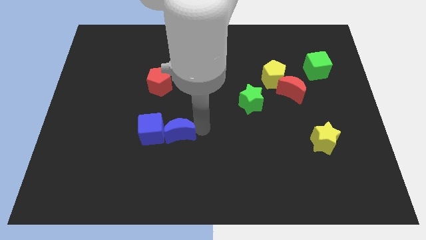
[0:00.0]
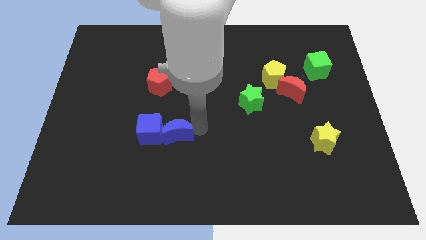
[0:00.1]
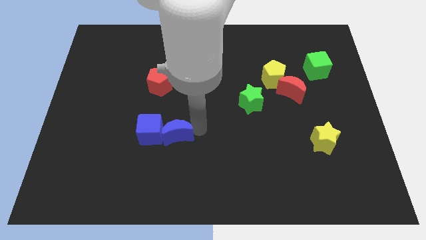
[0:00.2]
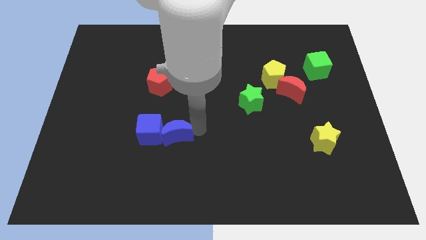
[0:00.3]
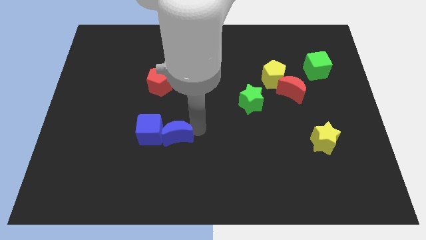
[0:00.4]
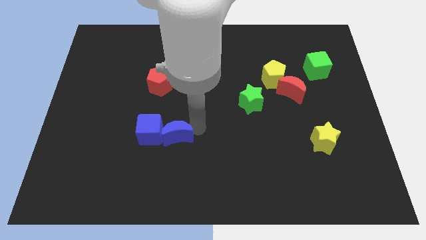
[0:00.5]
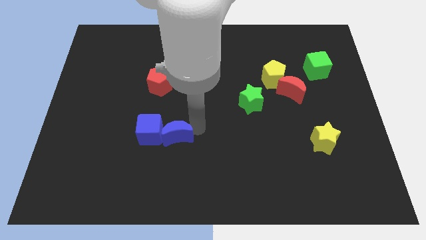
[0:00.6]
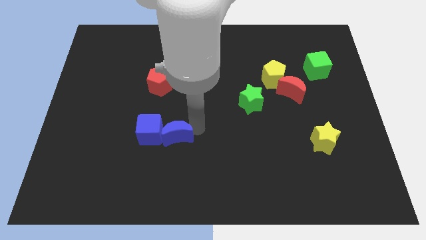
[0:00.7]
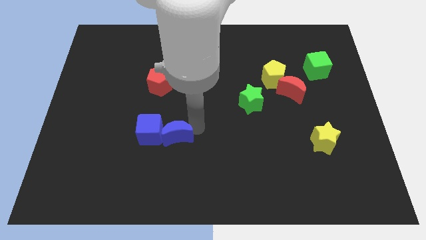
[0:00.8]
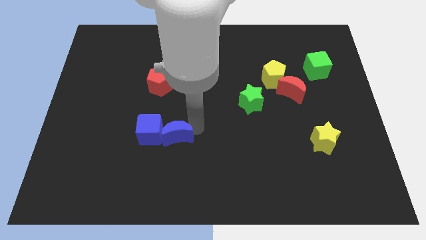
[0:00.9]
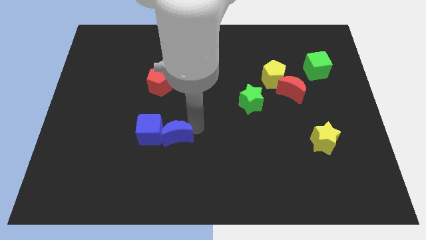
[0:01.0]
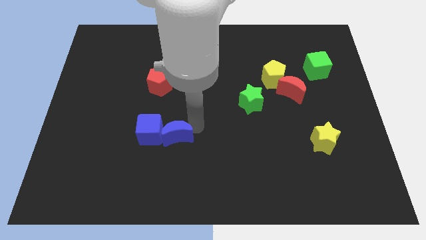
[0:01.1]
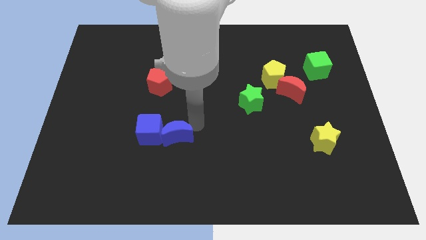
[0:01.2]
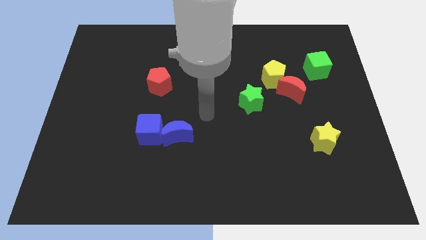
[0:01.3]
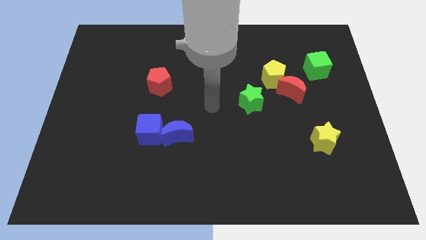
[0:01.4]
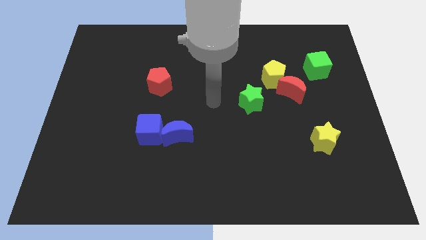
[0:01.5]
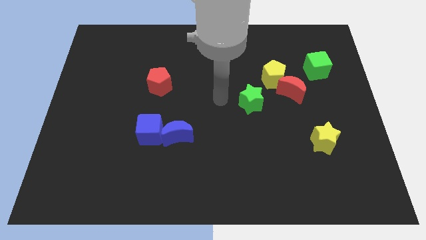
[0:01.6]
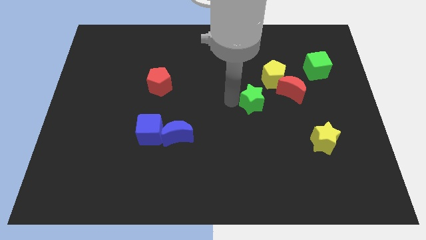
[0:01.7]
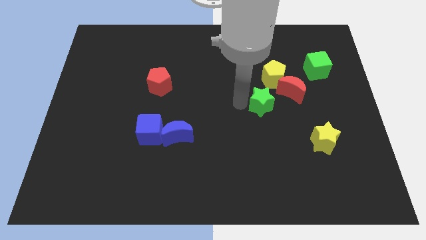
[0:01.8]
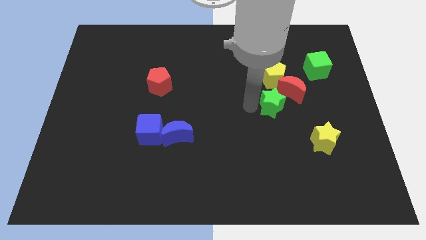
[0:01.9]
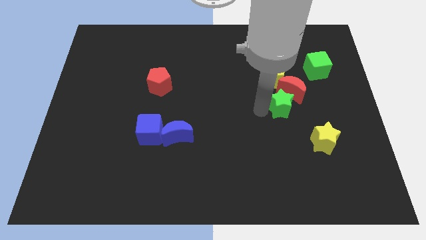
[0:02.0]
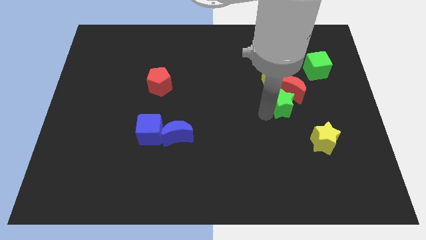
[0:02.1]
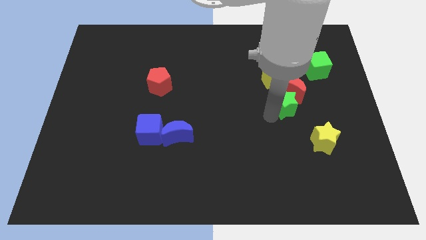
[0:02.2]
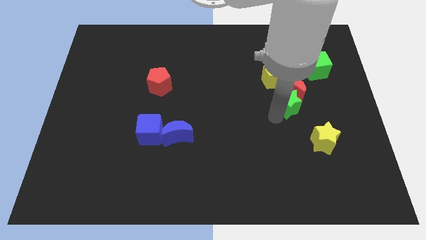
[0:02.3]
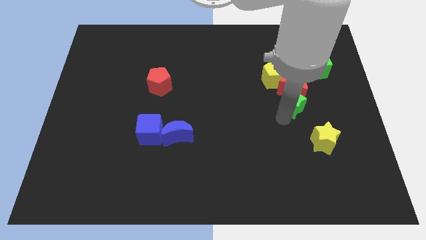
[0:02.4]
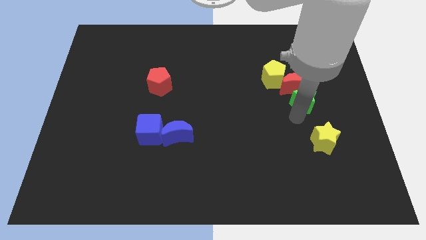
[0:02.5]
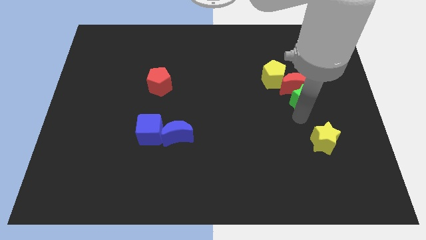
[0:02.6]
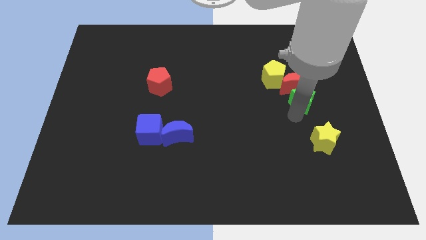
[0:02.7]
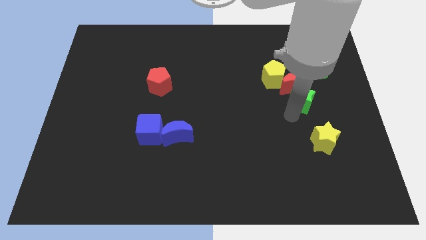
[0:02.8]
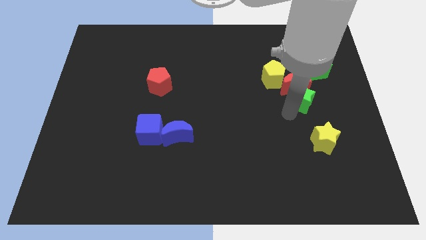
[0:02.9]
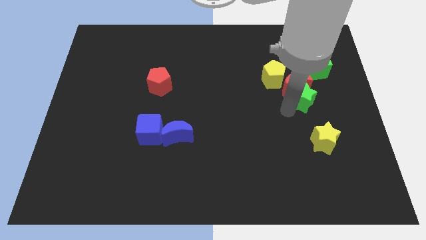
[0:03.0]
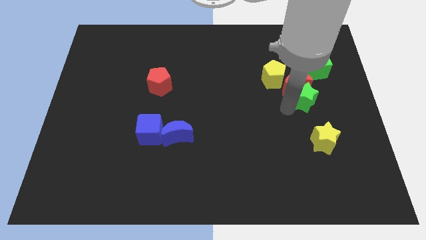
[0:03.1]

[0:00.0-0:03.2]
move the green star into the red moon

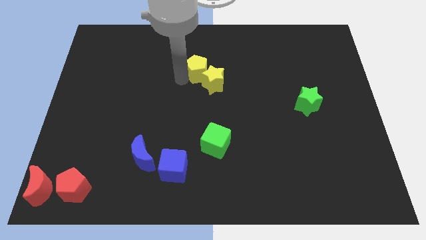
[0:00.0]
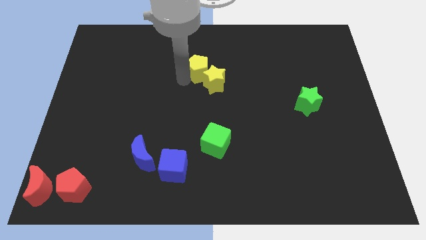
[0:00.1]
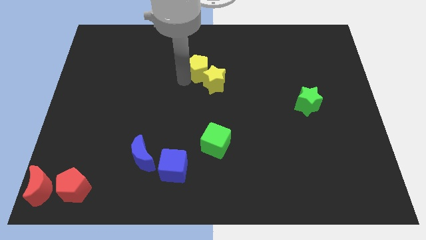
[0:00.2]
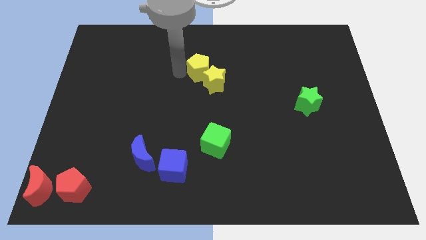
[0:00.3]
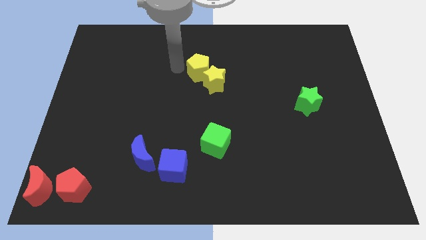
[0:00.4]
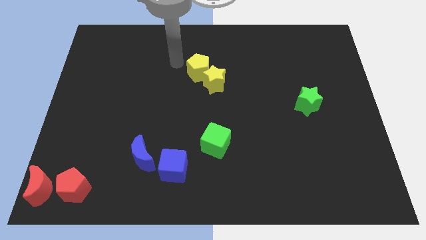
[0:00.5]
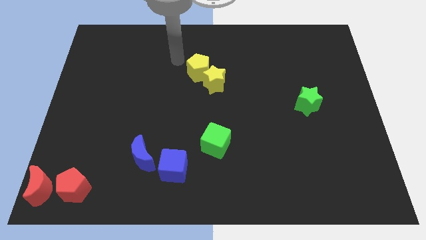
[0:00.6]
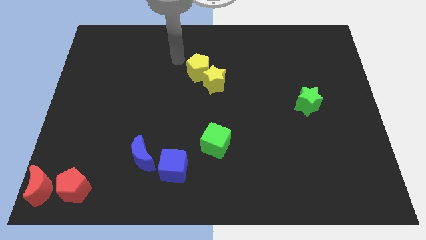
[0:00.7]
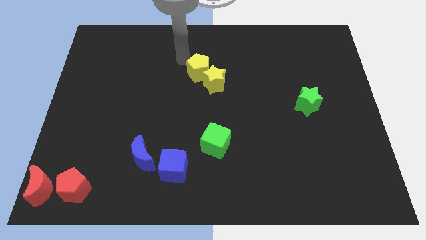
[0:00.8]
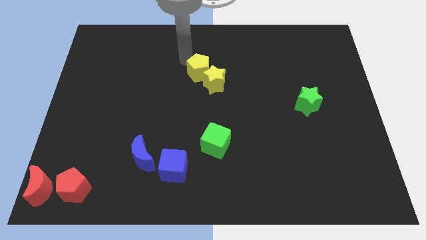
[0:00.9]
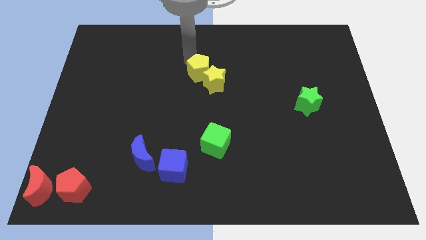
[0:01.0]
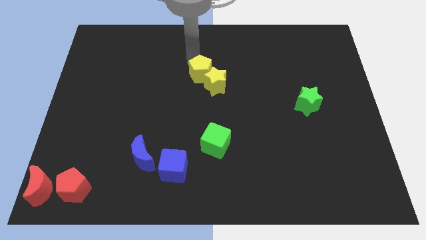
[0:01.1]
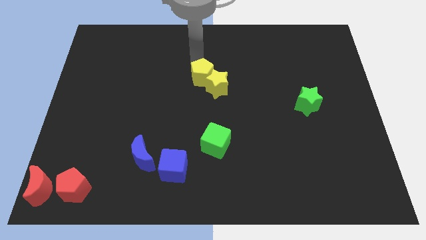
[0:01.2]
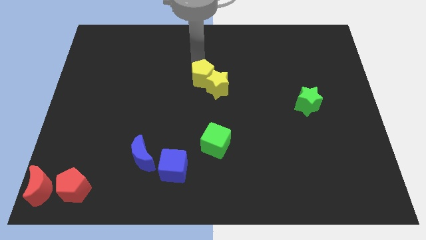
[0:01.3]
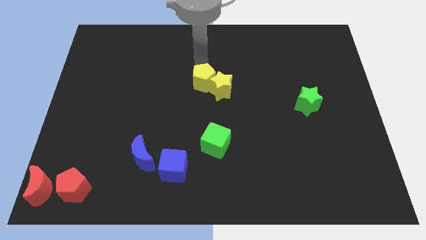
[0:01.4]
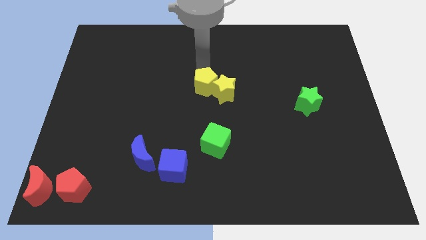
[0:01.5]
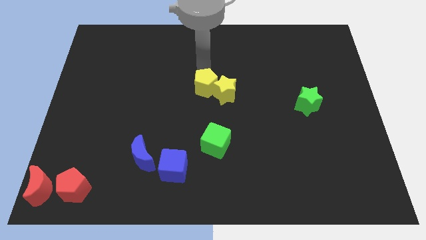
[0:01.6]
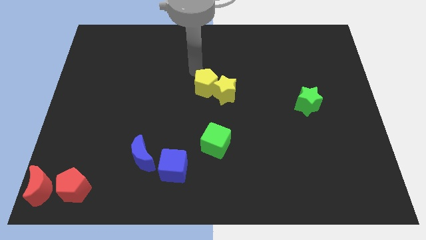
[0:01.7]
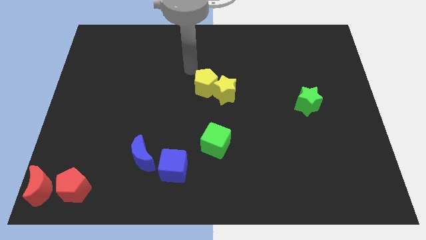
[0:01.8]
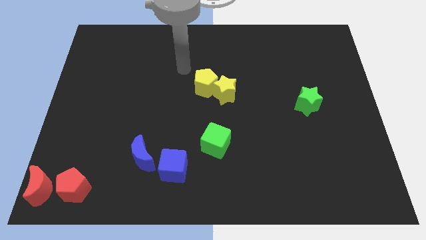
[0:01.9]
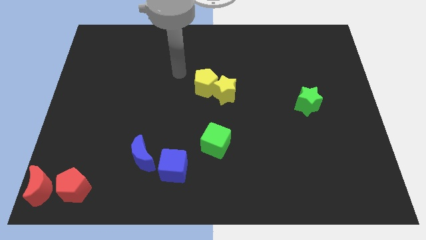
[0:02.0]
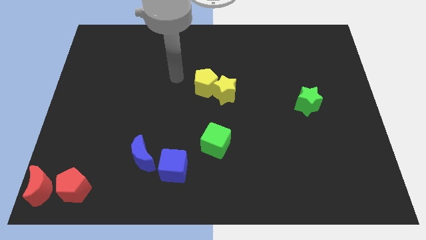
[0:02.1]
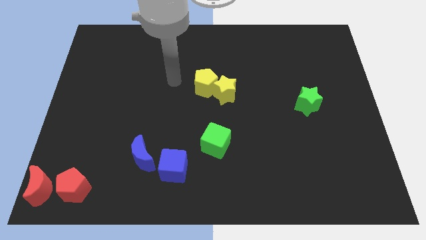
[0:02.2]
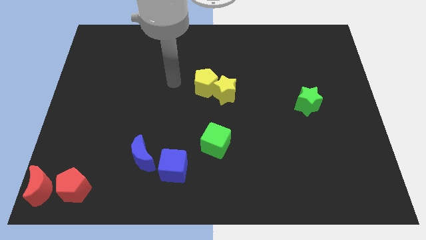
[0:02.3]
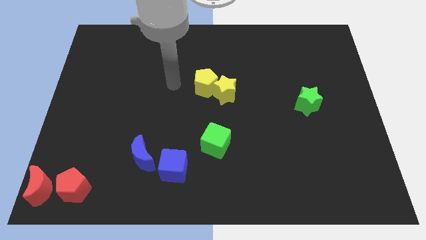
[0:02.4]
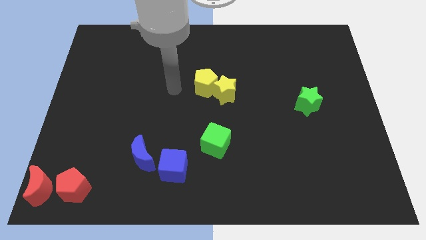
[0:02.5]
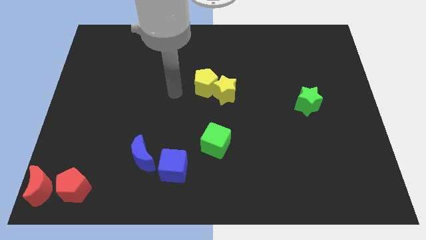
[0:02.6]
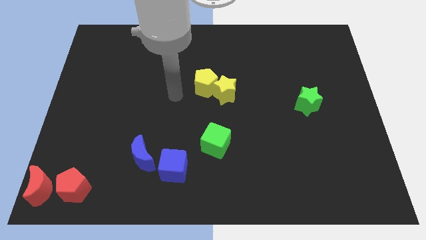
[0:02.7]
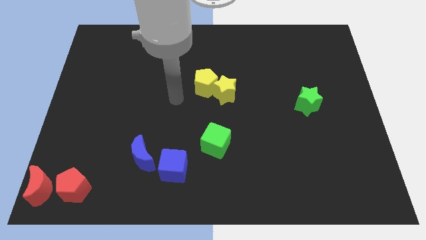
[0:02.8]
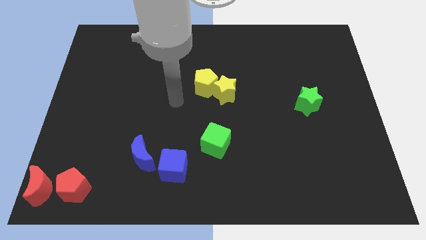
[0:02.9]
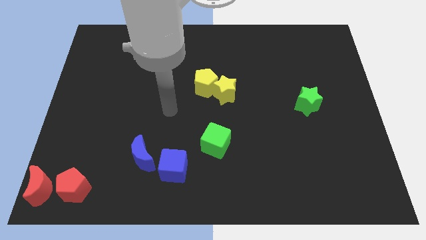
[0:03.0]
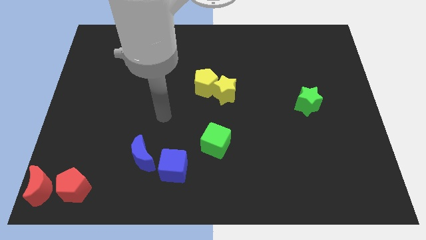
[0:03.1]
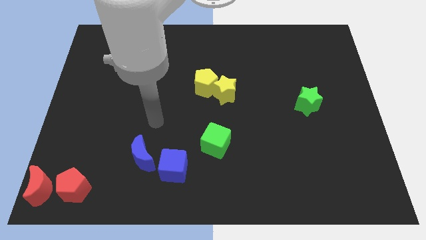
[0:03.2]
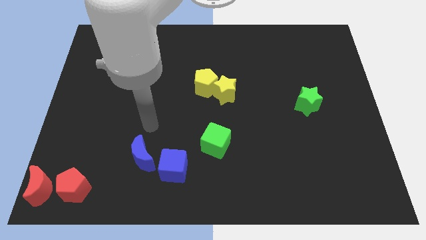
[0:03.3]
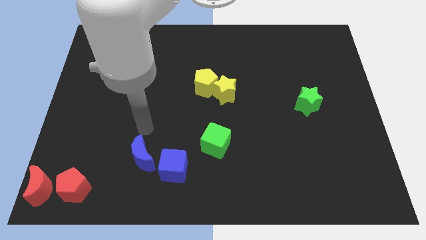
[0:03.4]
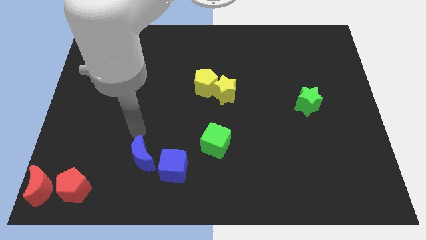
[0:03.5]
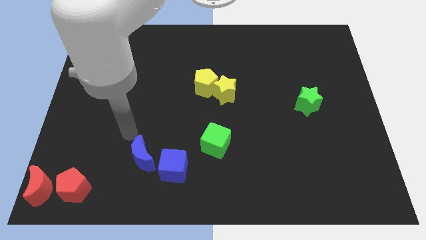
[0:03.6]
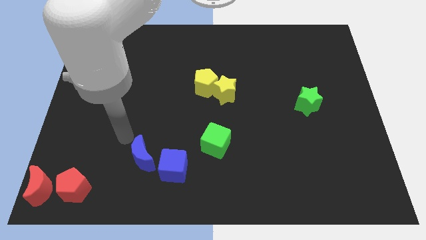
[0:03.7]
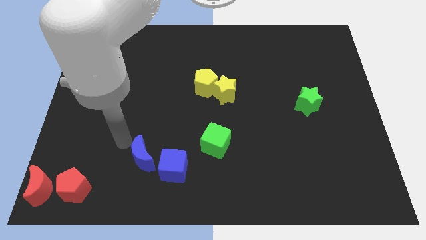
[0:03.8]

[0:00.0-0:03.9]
push the yellow star towards the center with the yellow pentagon

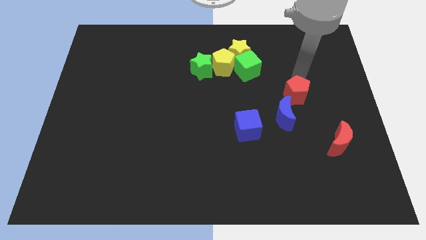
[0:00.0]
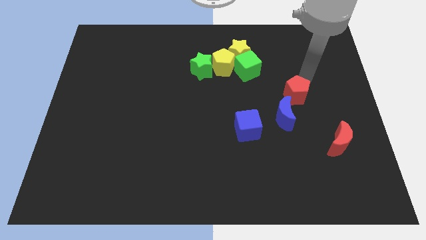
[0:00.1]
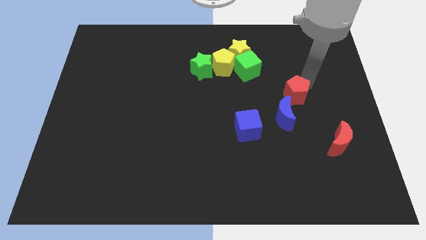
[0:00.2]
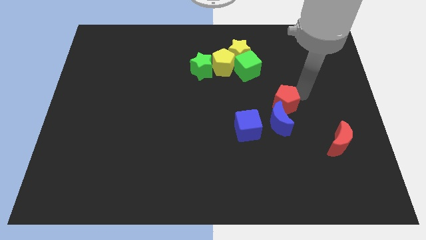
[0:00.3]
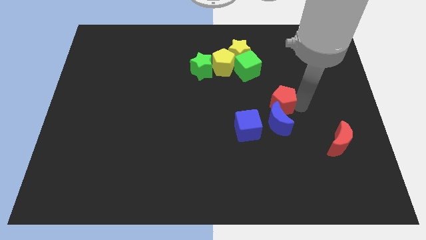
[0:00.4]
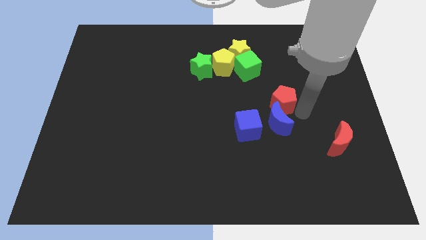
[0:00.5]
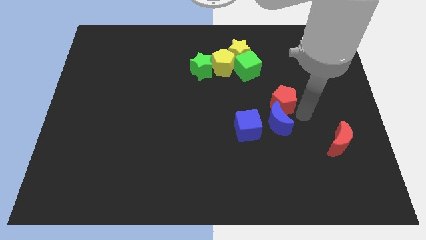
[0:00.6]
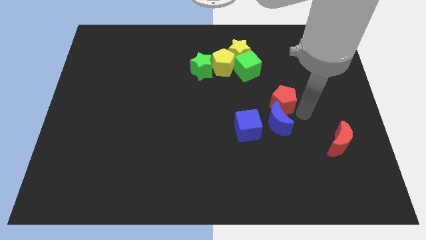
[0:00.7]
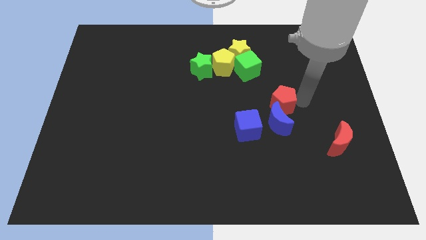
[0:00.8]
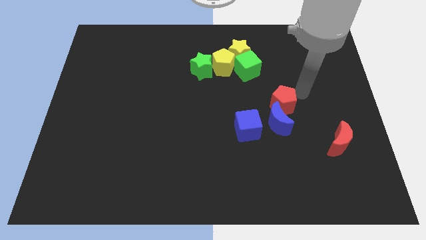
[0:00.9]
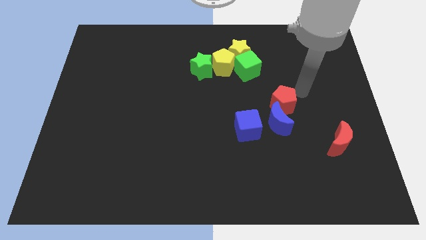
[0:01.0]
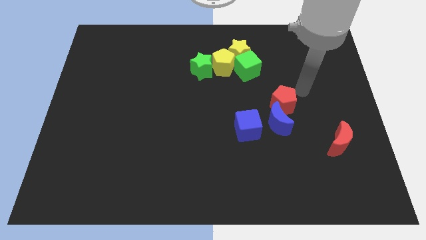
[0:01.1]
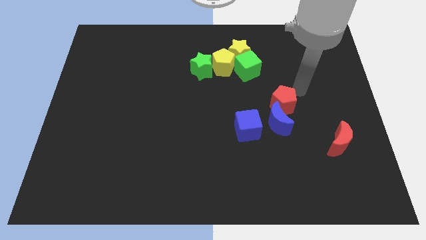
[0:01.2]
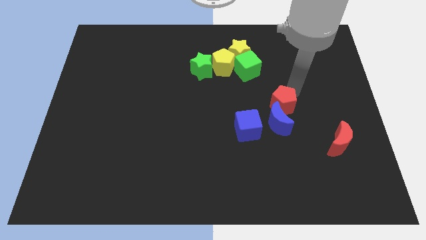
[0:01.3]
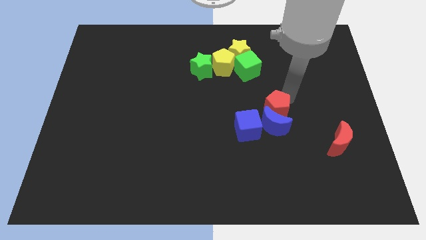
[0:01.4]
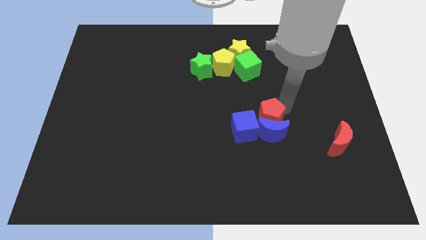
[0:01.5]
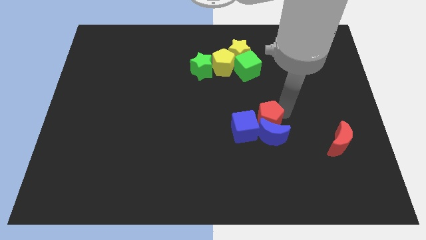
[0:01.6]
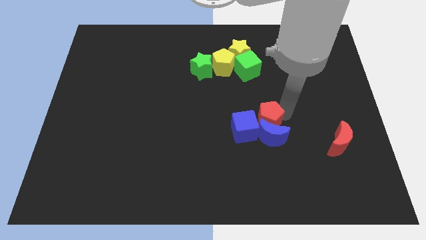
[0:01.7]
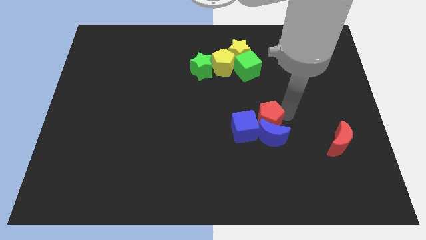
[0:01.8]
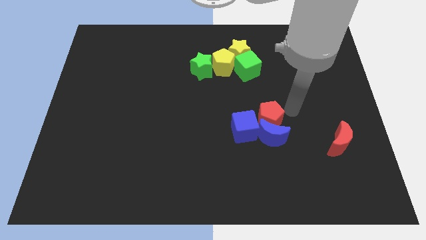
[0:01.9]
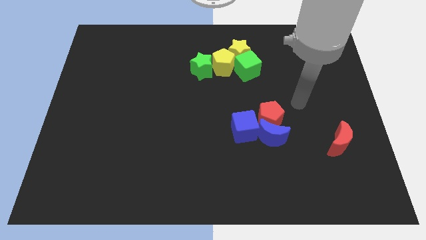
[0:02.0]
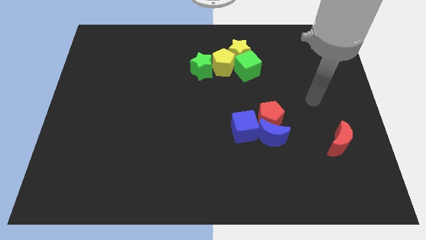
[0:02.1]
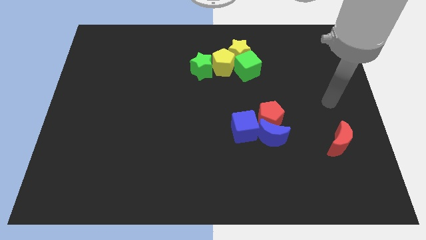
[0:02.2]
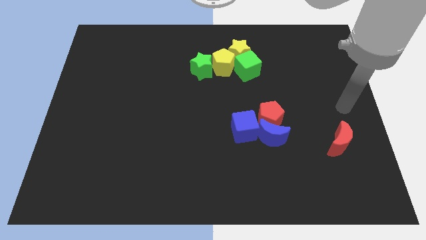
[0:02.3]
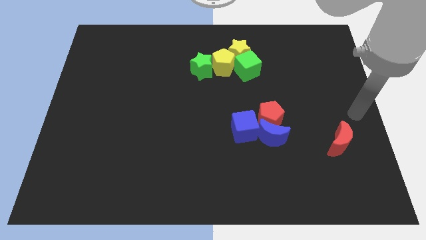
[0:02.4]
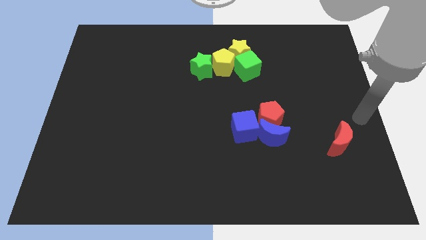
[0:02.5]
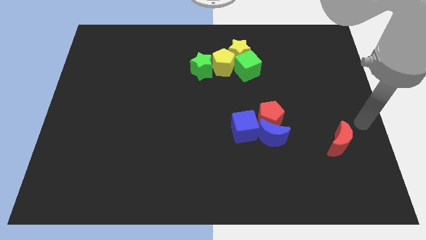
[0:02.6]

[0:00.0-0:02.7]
place red pentagon towards blue cube
